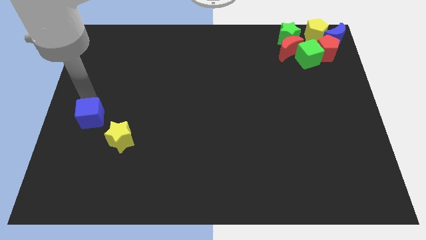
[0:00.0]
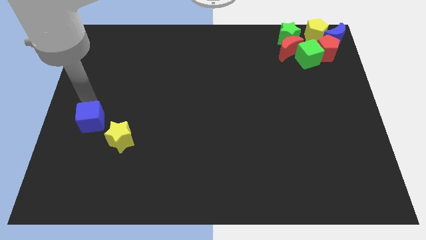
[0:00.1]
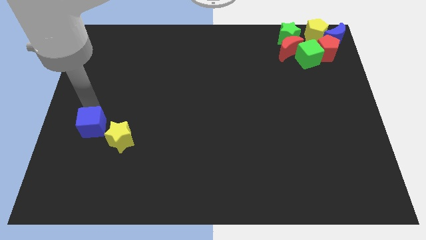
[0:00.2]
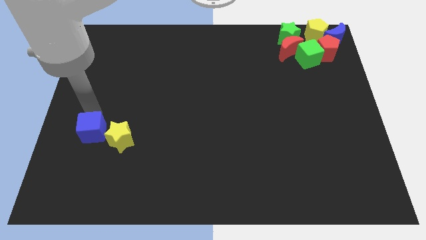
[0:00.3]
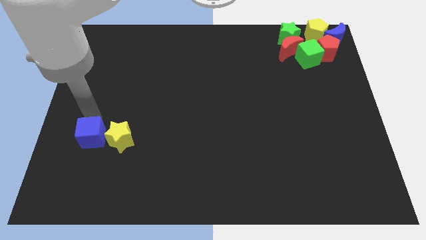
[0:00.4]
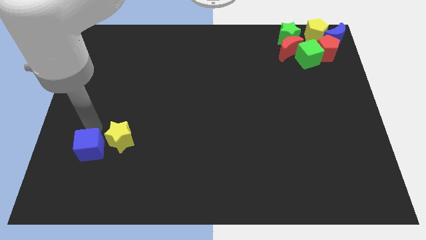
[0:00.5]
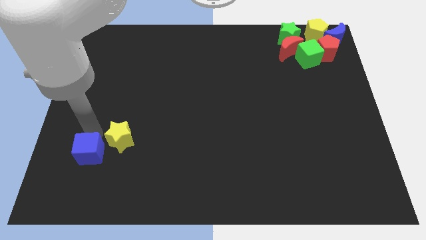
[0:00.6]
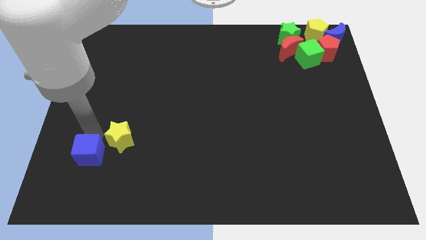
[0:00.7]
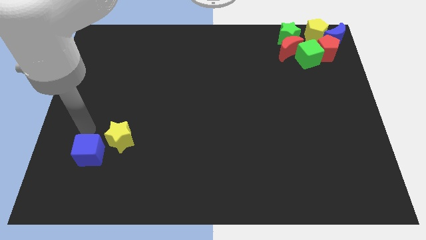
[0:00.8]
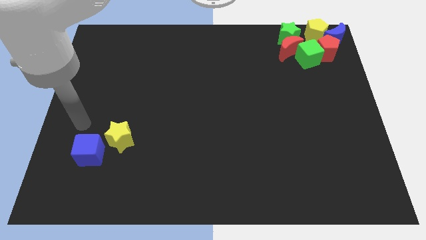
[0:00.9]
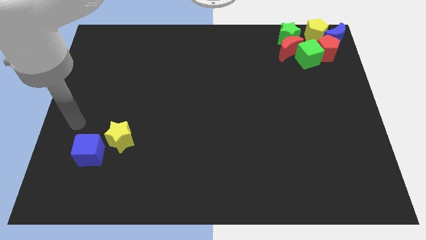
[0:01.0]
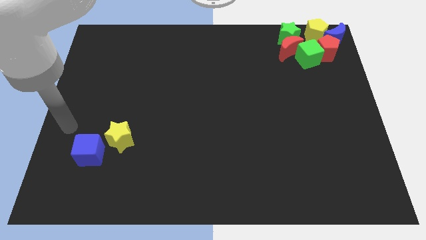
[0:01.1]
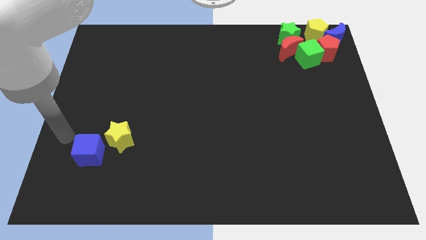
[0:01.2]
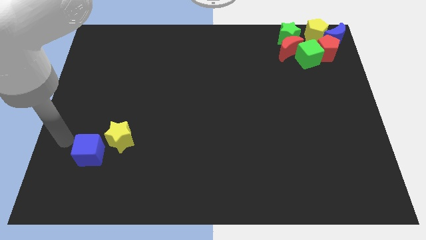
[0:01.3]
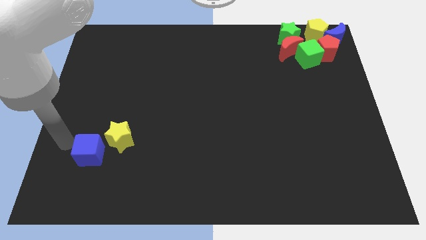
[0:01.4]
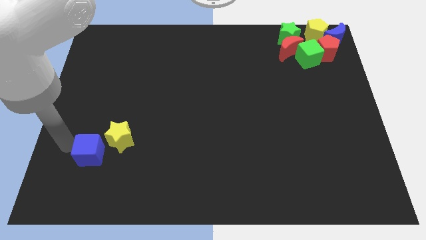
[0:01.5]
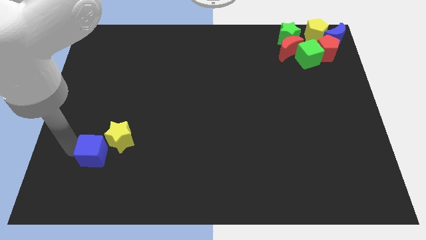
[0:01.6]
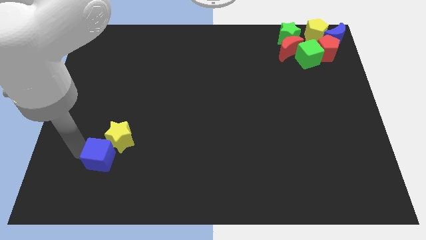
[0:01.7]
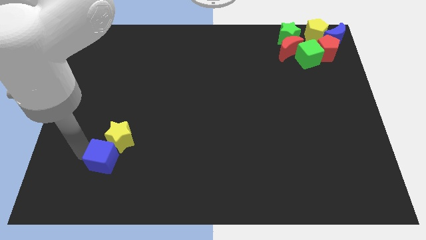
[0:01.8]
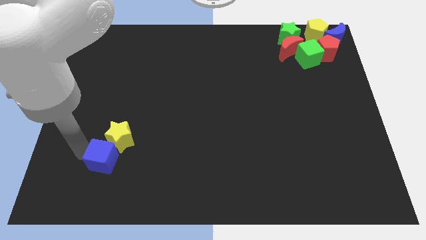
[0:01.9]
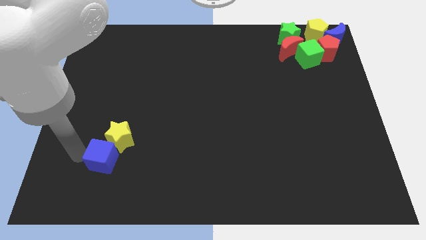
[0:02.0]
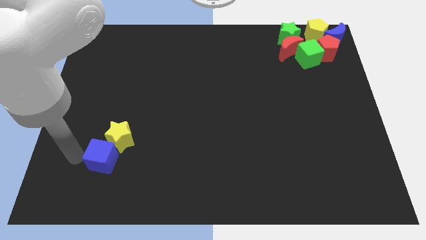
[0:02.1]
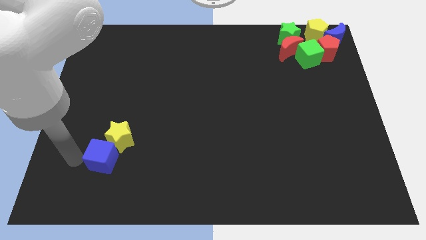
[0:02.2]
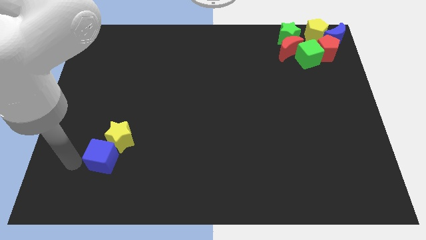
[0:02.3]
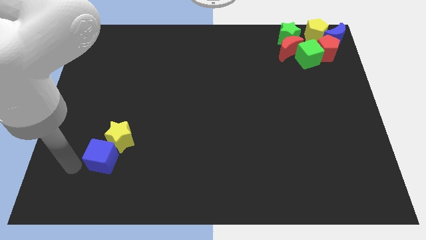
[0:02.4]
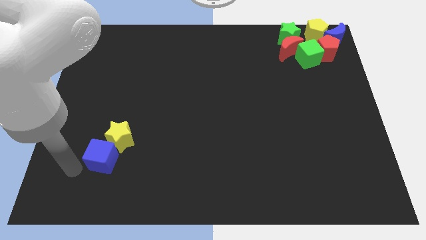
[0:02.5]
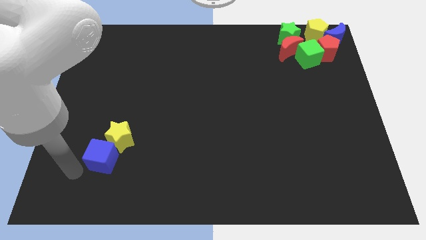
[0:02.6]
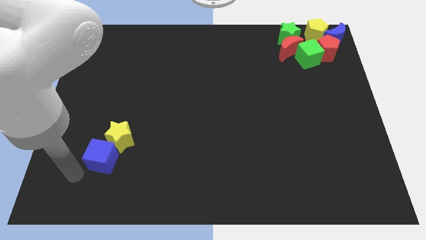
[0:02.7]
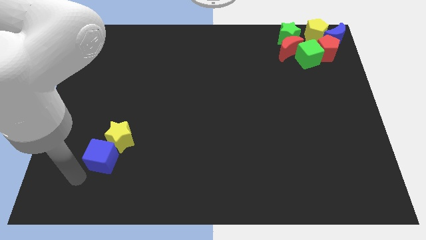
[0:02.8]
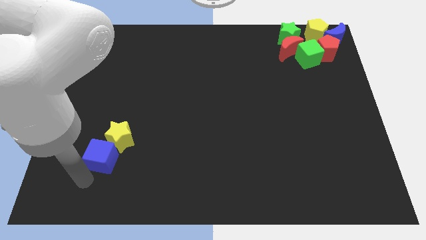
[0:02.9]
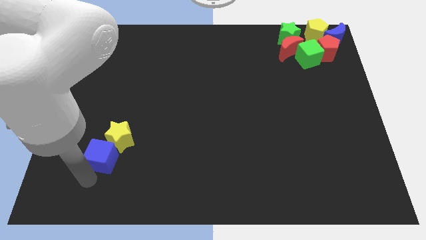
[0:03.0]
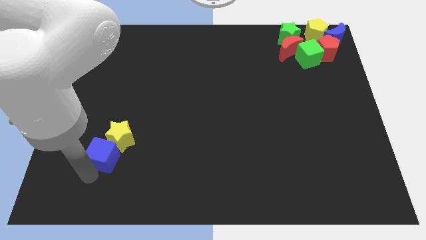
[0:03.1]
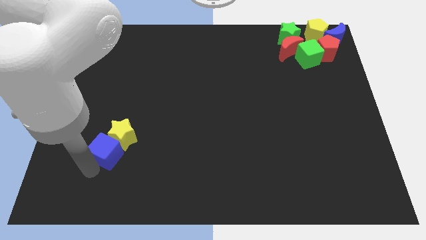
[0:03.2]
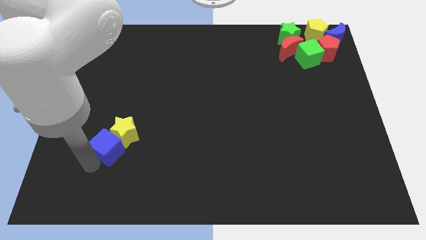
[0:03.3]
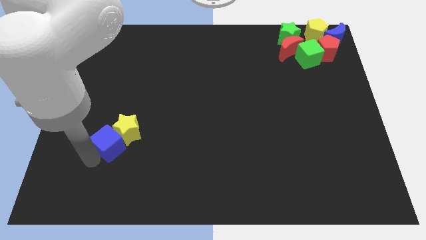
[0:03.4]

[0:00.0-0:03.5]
push the blue cube into the yellow star

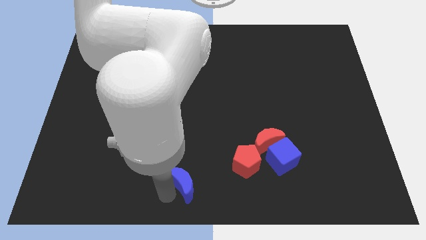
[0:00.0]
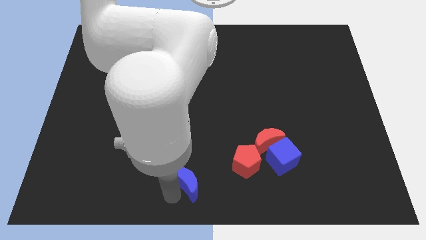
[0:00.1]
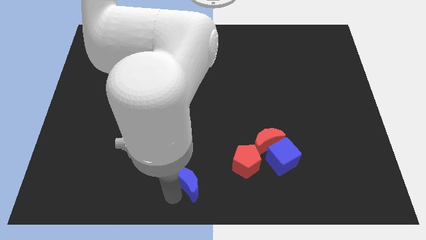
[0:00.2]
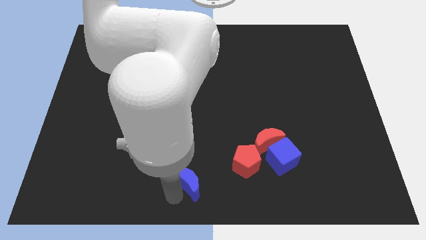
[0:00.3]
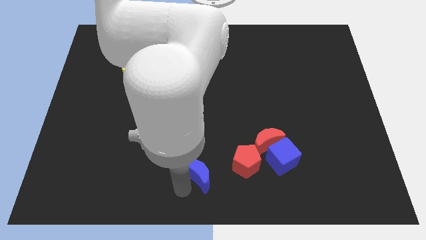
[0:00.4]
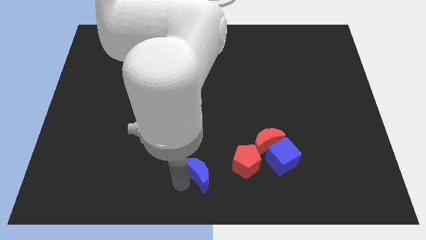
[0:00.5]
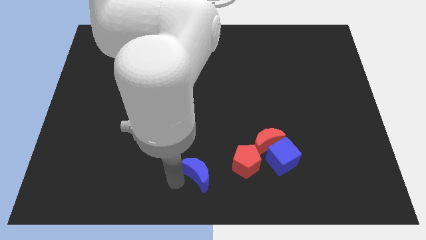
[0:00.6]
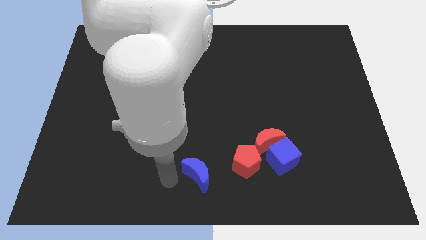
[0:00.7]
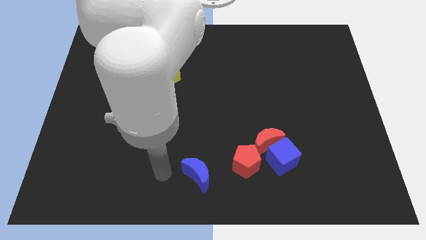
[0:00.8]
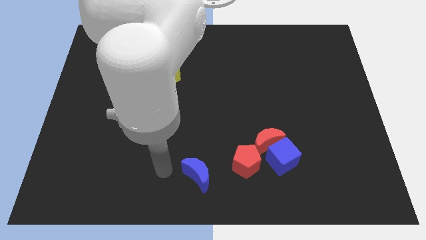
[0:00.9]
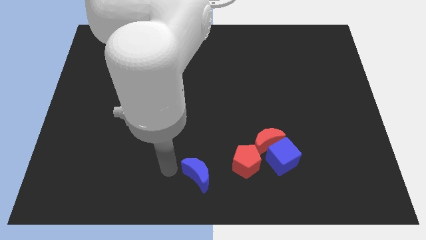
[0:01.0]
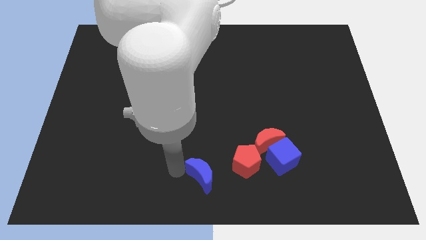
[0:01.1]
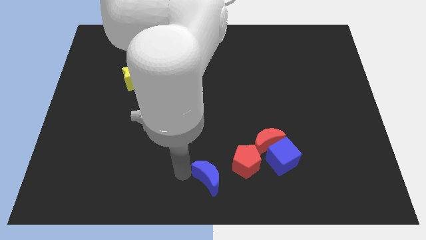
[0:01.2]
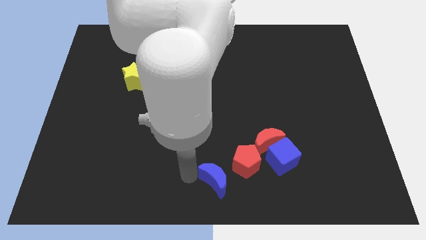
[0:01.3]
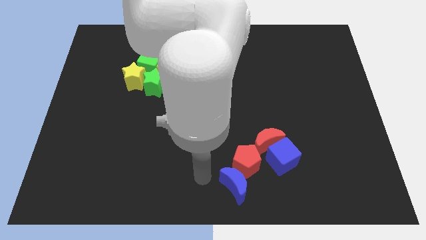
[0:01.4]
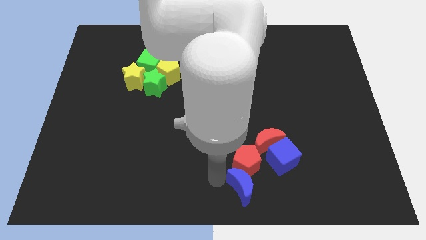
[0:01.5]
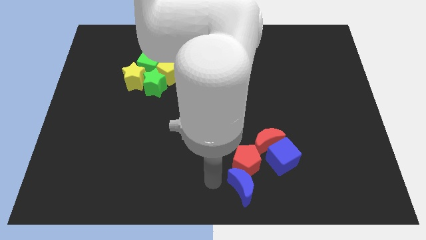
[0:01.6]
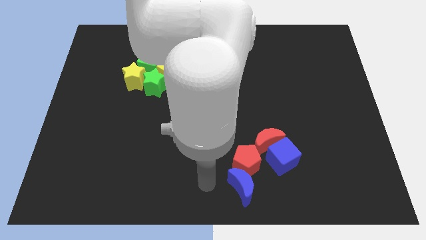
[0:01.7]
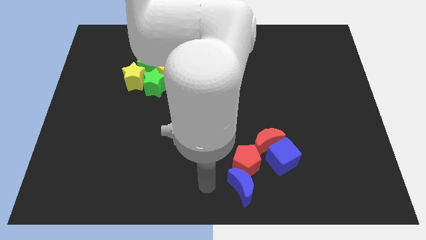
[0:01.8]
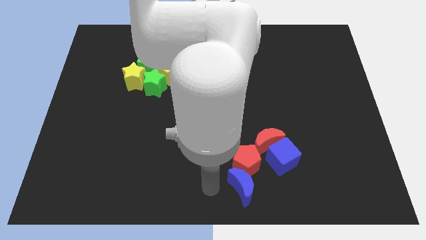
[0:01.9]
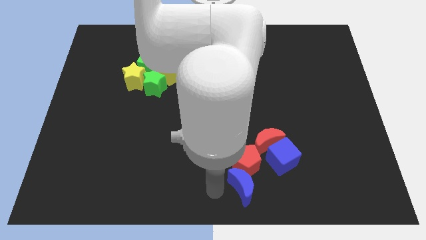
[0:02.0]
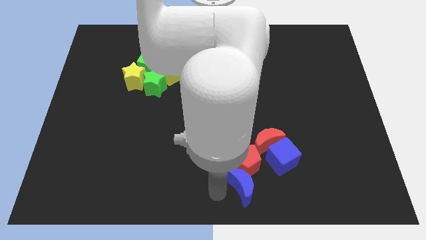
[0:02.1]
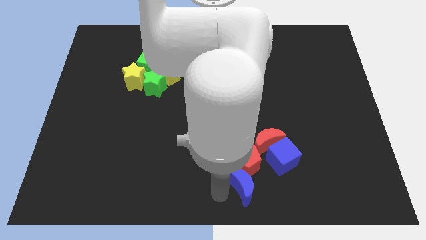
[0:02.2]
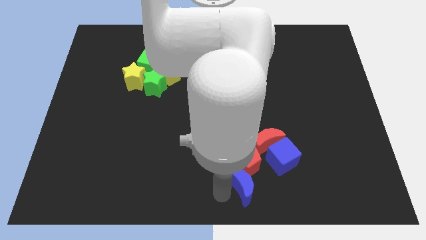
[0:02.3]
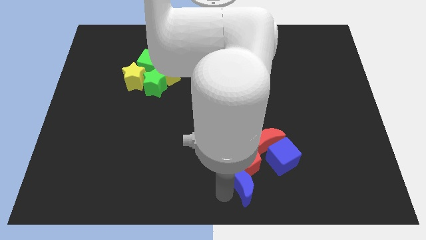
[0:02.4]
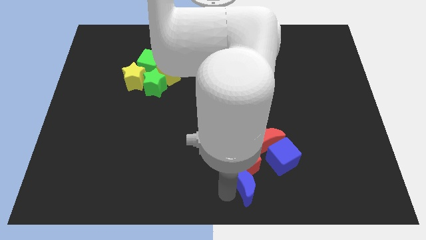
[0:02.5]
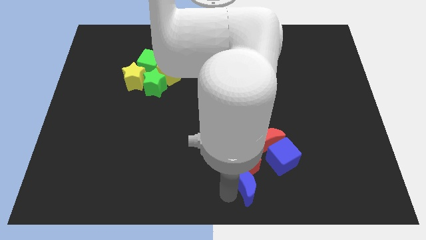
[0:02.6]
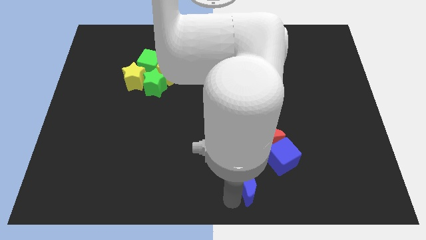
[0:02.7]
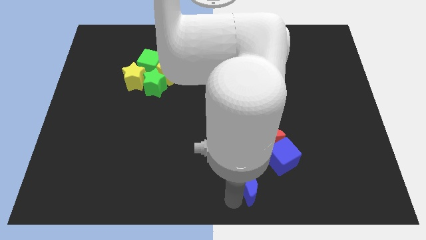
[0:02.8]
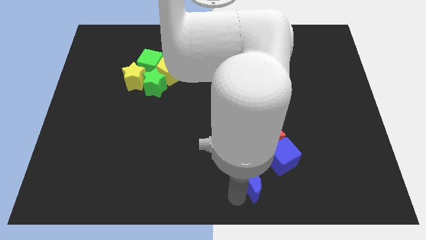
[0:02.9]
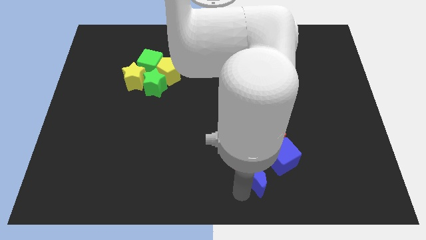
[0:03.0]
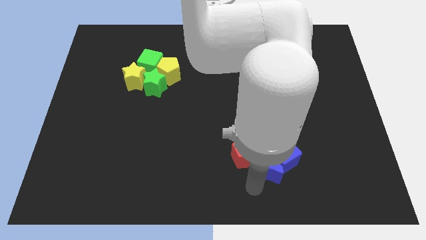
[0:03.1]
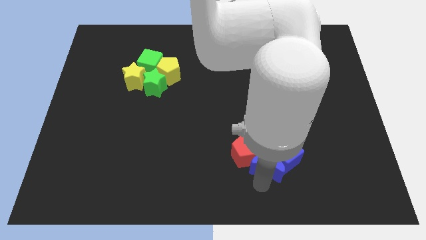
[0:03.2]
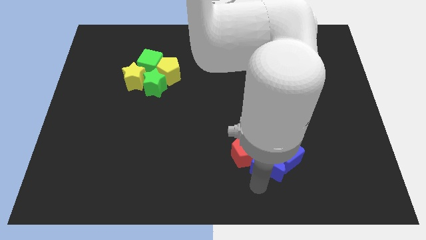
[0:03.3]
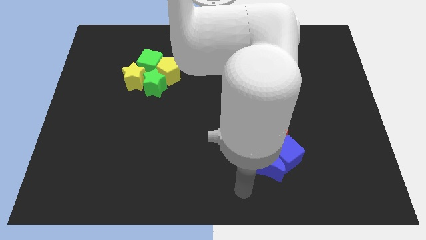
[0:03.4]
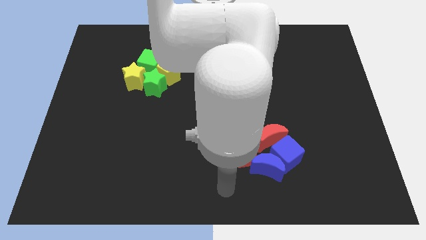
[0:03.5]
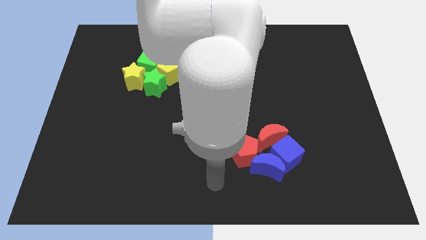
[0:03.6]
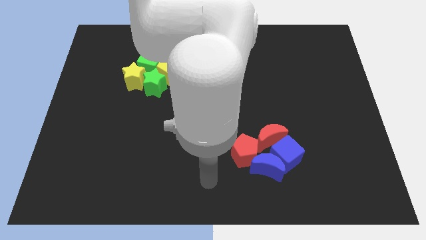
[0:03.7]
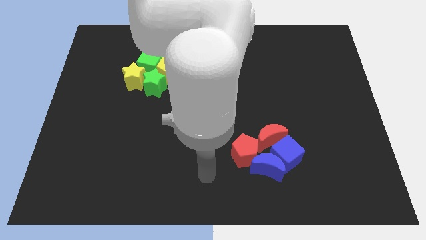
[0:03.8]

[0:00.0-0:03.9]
move the blue moon into blue cube

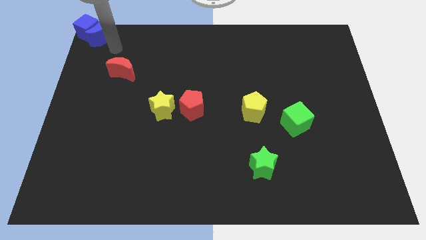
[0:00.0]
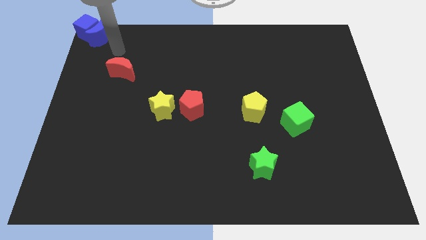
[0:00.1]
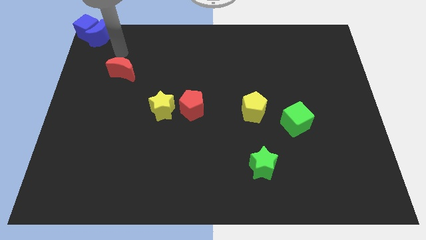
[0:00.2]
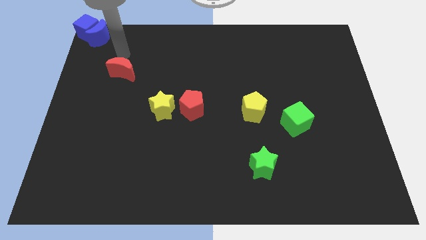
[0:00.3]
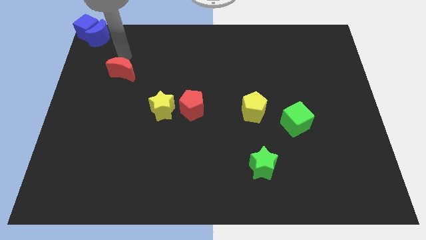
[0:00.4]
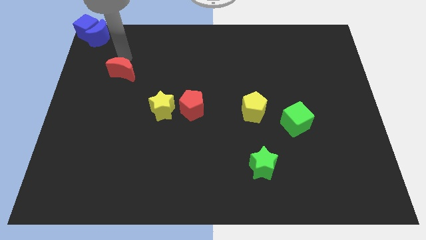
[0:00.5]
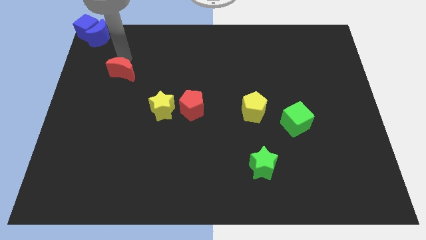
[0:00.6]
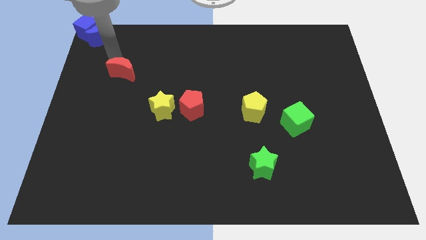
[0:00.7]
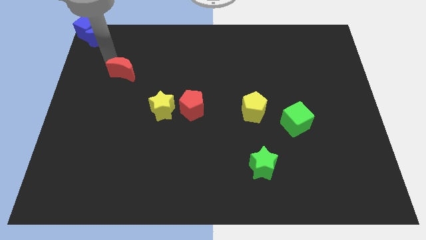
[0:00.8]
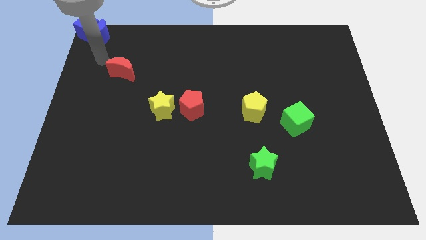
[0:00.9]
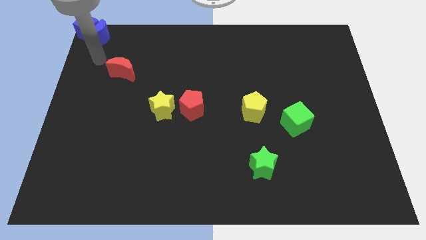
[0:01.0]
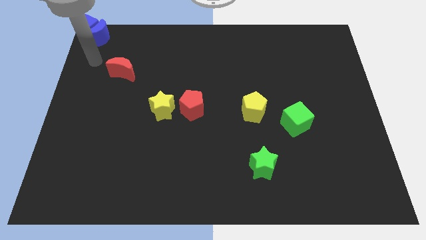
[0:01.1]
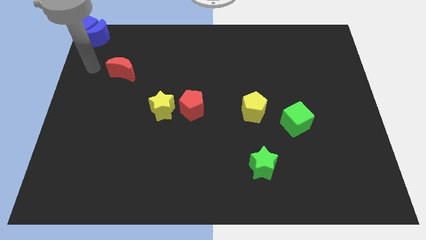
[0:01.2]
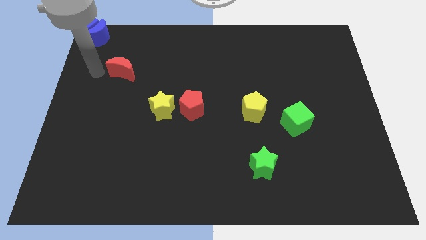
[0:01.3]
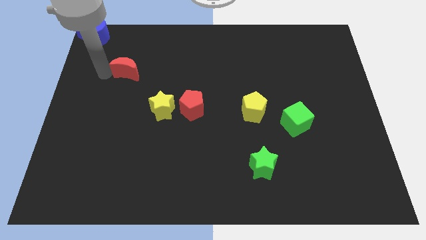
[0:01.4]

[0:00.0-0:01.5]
move your hand at the left of the red moon

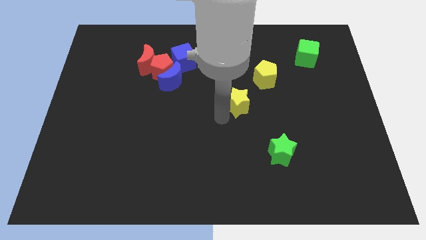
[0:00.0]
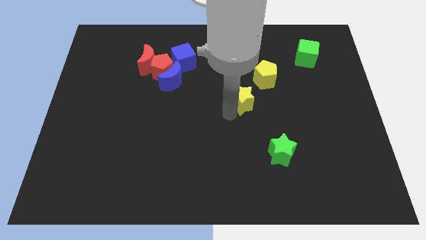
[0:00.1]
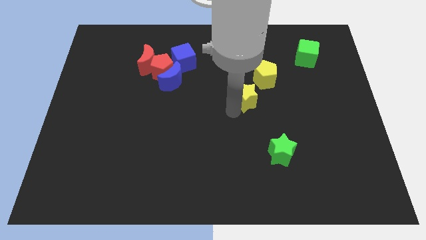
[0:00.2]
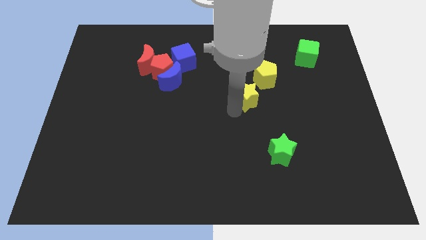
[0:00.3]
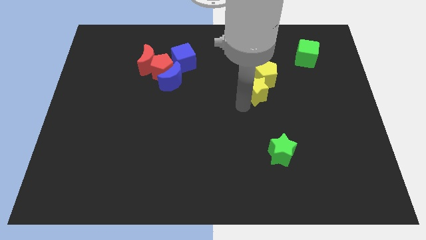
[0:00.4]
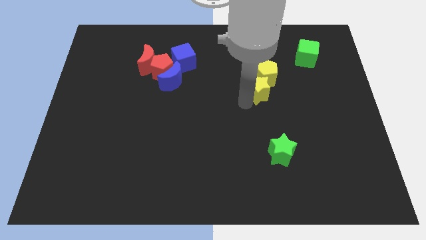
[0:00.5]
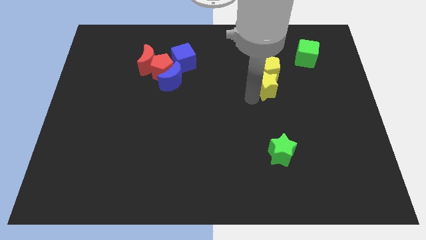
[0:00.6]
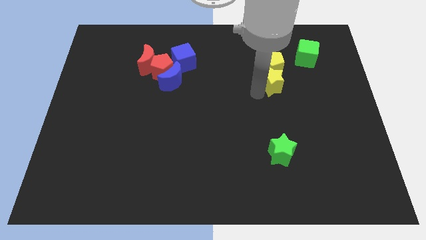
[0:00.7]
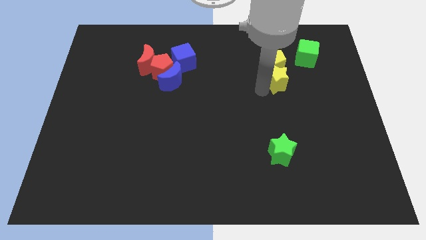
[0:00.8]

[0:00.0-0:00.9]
push the yellow star into the yellow pentagon
